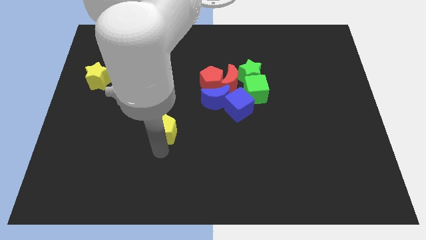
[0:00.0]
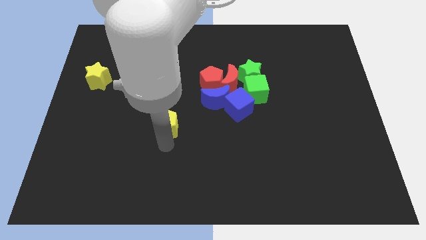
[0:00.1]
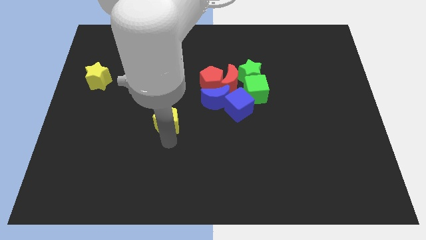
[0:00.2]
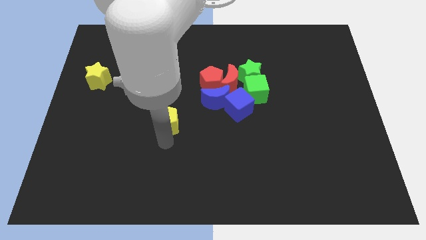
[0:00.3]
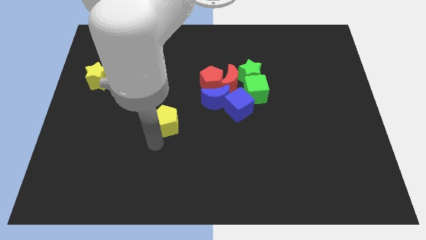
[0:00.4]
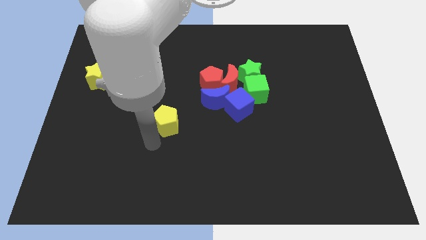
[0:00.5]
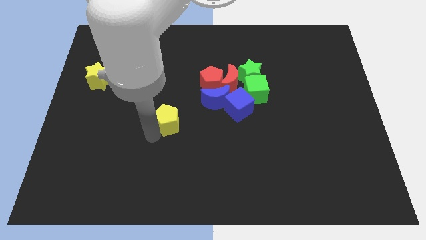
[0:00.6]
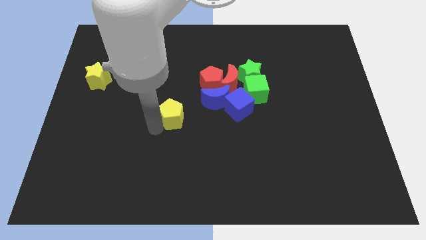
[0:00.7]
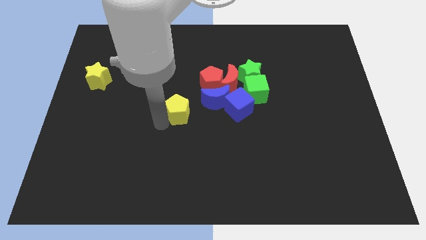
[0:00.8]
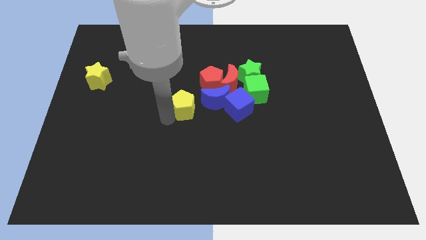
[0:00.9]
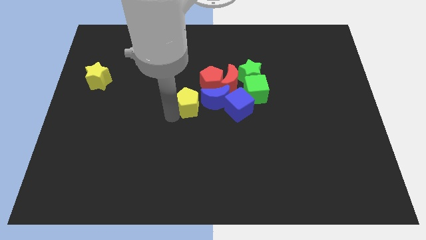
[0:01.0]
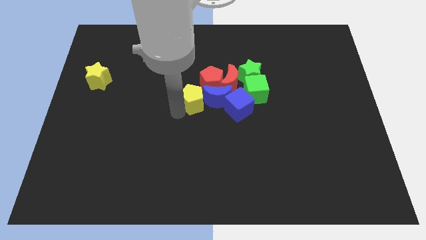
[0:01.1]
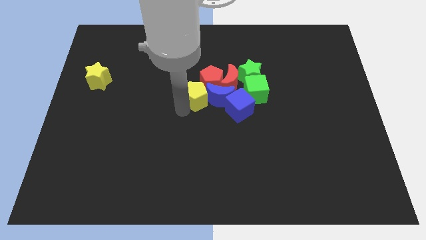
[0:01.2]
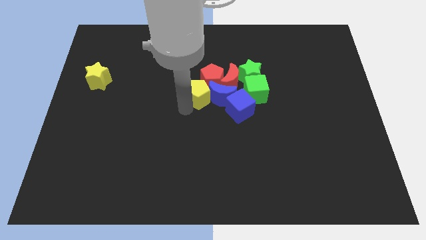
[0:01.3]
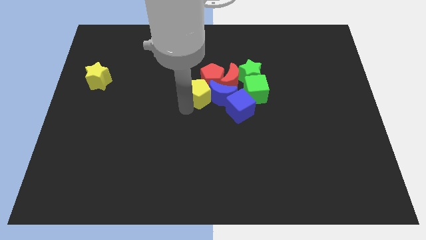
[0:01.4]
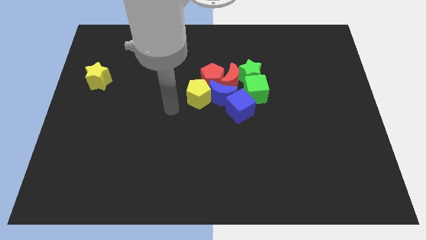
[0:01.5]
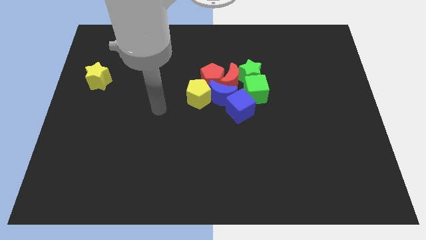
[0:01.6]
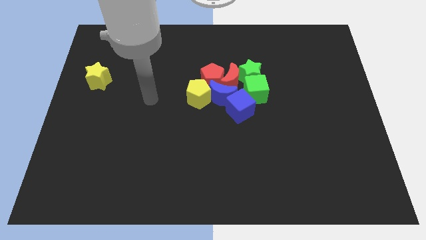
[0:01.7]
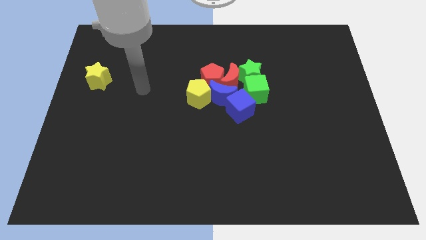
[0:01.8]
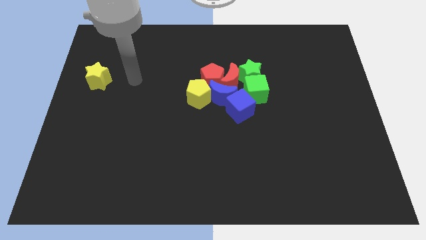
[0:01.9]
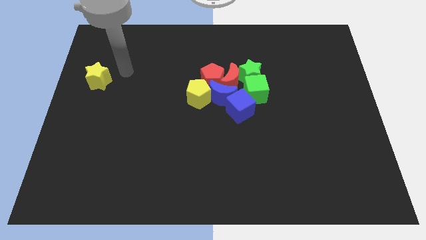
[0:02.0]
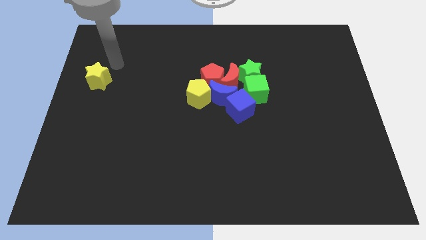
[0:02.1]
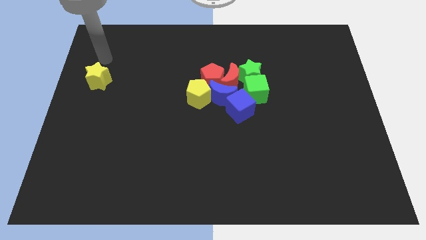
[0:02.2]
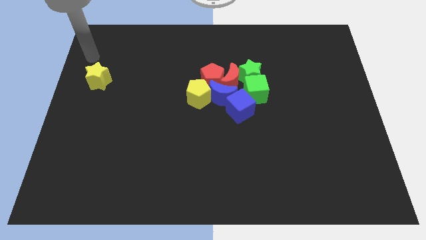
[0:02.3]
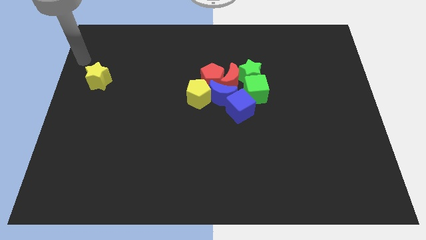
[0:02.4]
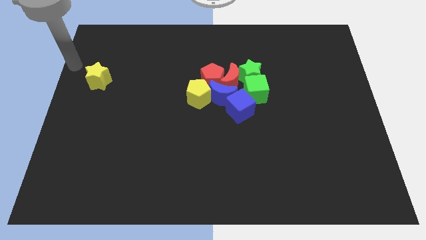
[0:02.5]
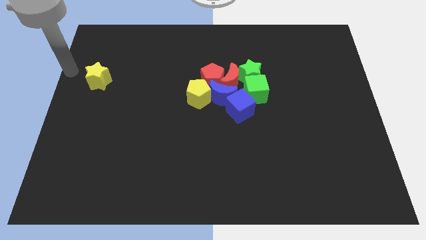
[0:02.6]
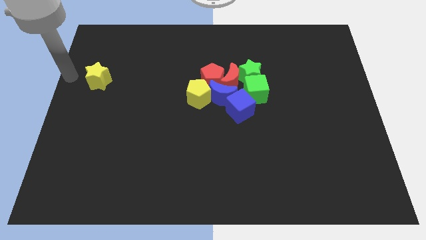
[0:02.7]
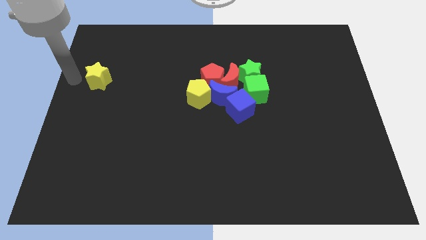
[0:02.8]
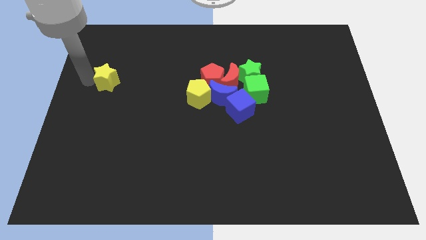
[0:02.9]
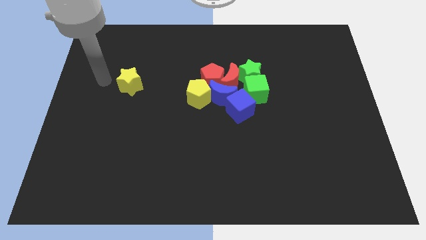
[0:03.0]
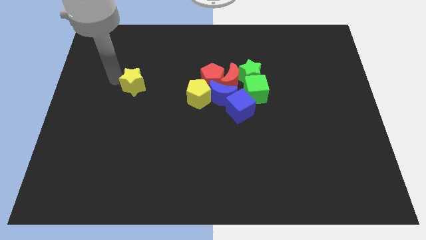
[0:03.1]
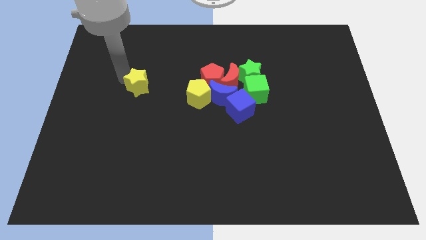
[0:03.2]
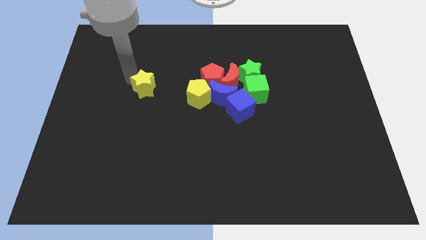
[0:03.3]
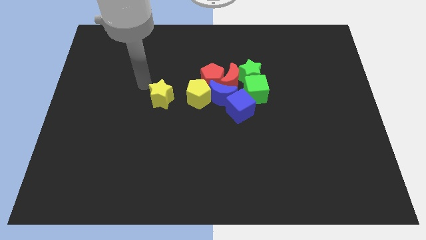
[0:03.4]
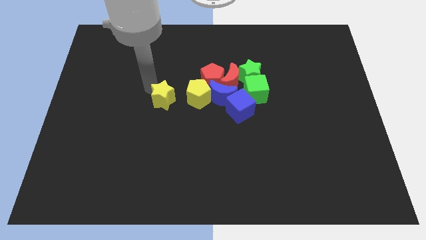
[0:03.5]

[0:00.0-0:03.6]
put yellow pentagon parallel to yellow star

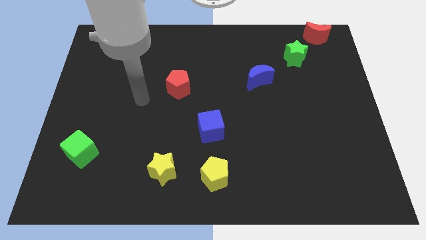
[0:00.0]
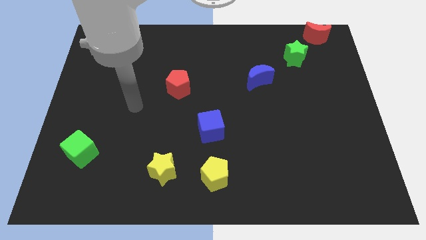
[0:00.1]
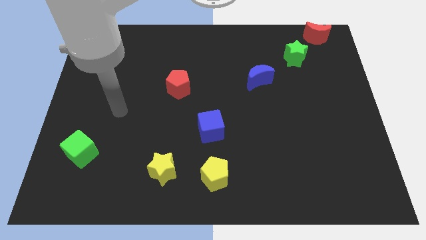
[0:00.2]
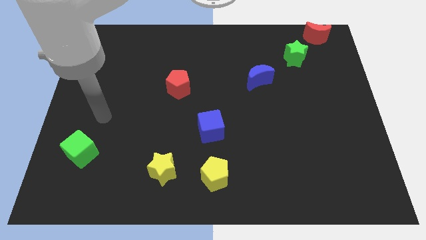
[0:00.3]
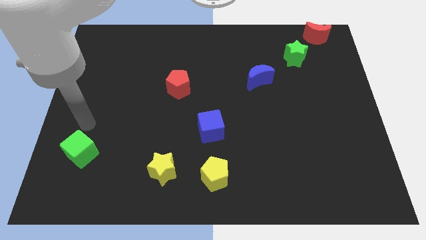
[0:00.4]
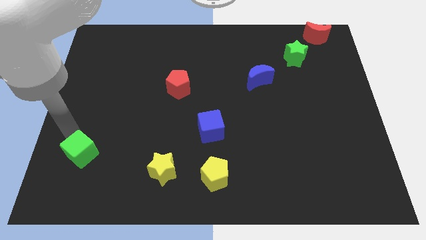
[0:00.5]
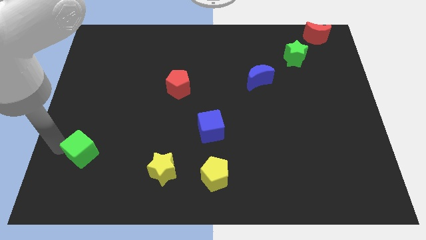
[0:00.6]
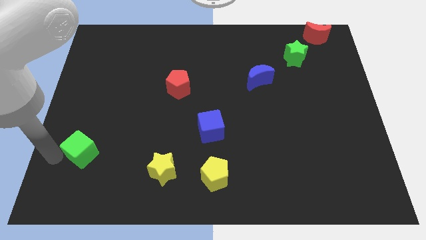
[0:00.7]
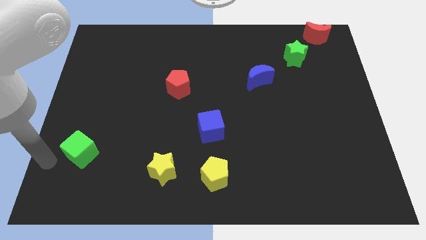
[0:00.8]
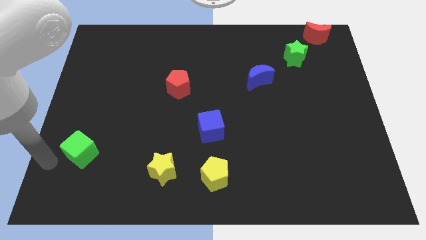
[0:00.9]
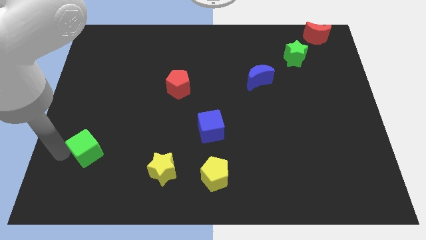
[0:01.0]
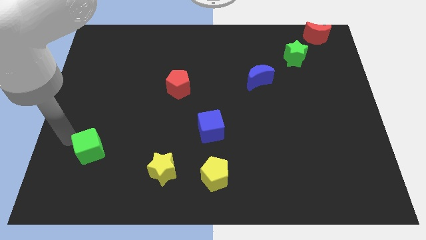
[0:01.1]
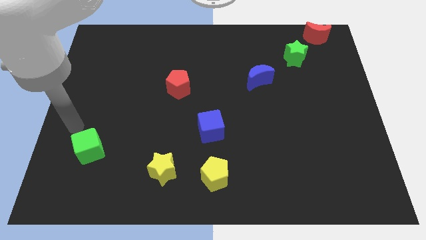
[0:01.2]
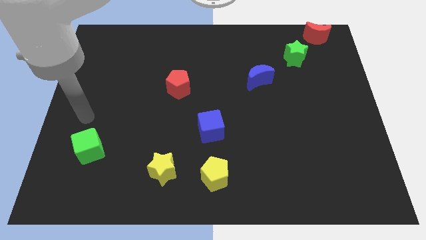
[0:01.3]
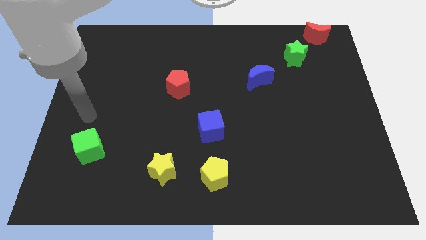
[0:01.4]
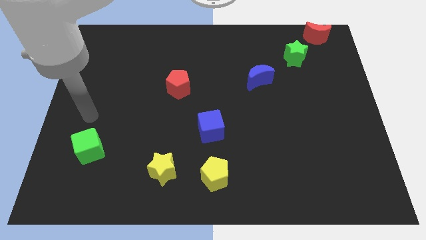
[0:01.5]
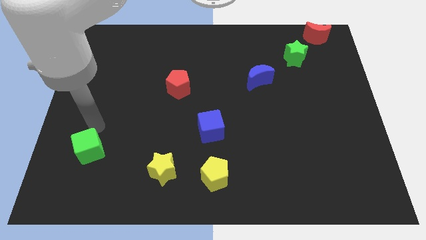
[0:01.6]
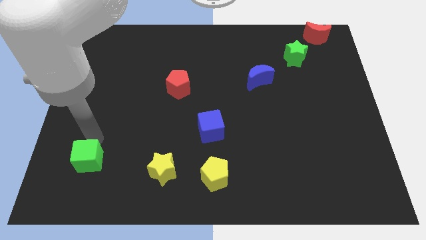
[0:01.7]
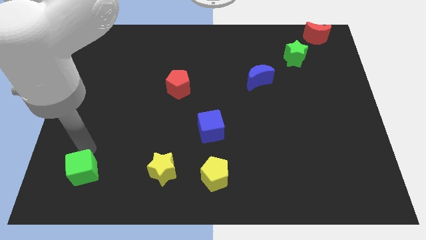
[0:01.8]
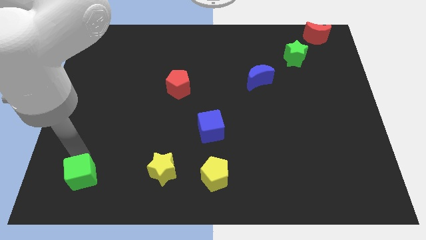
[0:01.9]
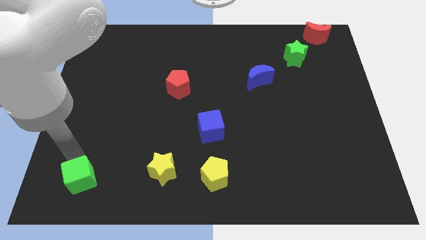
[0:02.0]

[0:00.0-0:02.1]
place green cube to left of yellow star

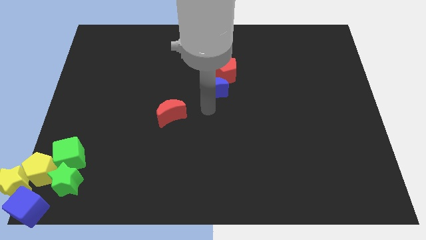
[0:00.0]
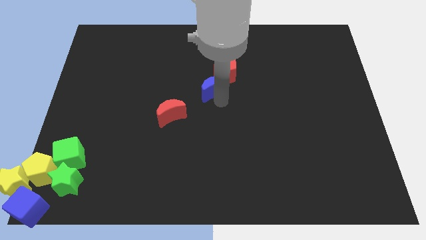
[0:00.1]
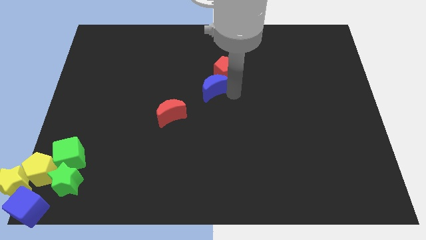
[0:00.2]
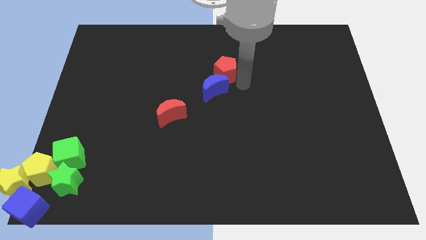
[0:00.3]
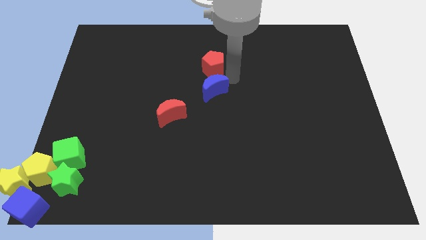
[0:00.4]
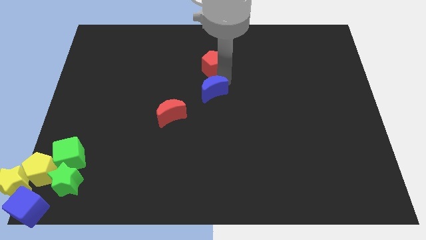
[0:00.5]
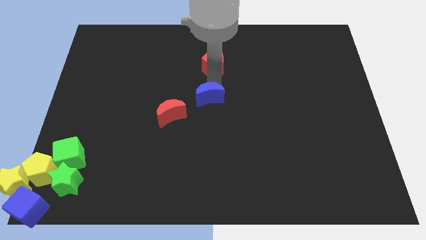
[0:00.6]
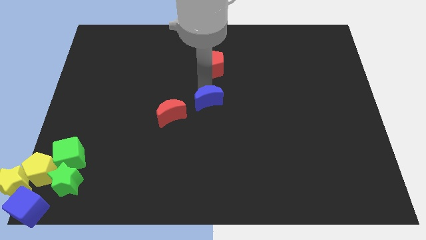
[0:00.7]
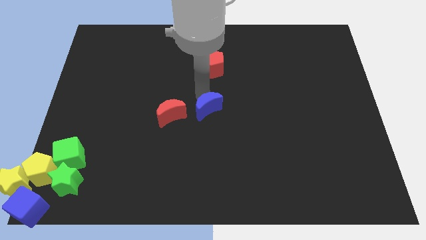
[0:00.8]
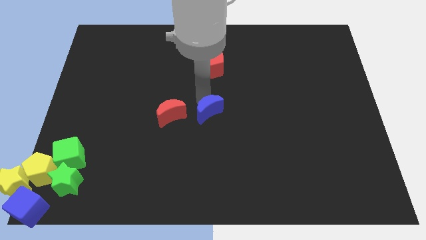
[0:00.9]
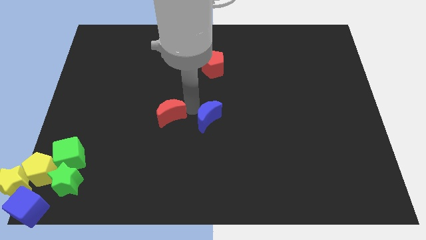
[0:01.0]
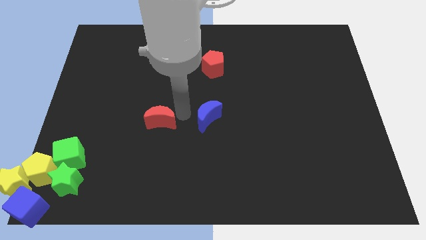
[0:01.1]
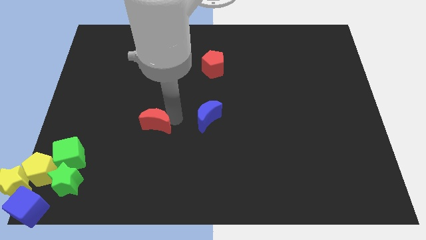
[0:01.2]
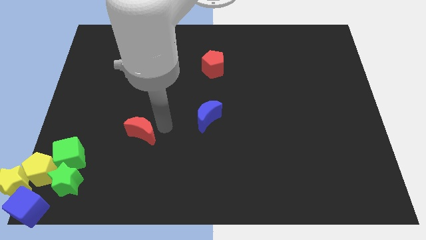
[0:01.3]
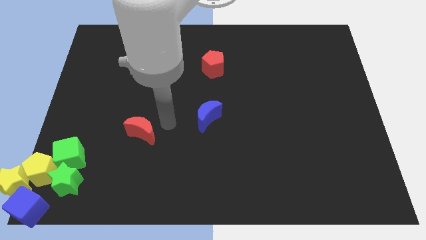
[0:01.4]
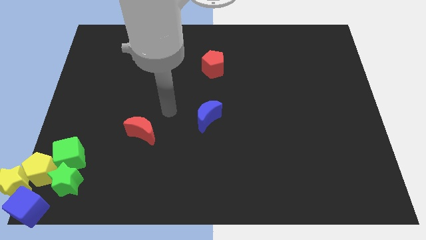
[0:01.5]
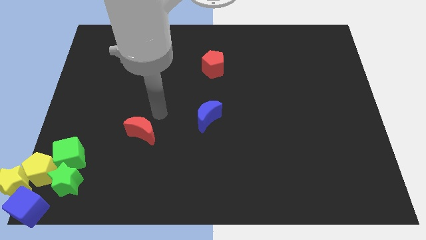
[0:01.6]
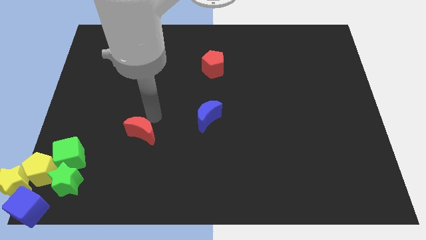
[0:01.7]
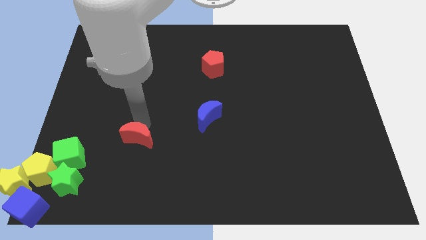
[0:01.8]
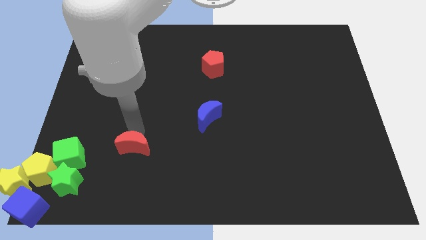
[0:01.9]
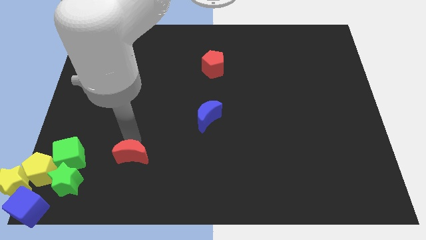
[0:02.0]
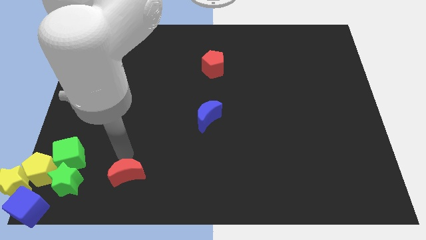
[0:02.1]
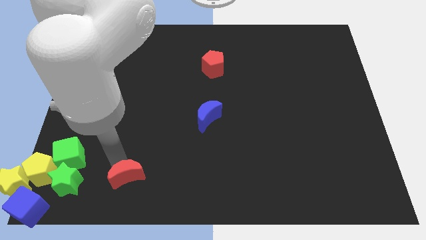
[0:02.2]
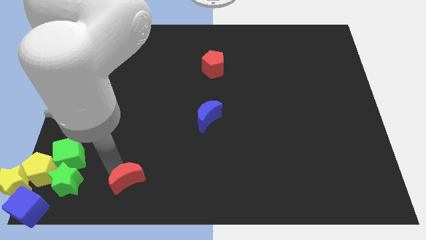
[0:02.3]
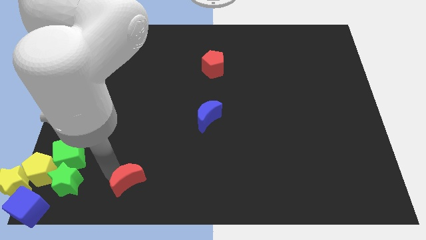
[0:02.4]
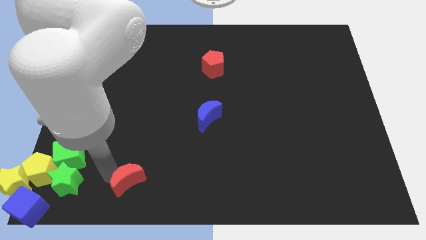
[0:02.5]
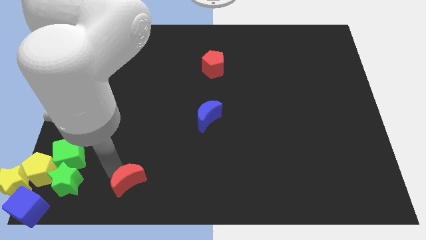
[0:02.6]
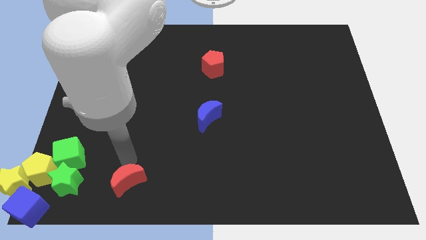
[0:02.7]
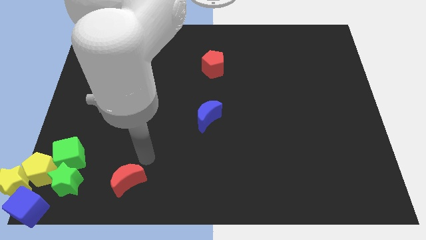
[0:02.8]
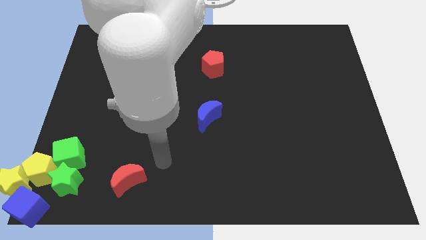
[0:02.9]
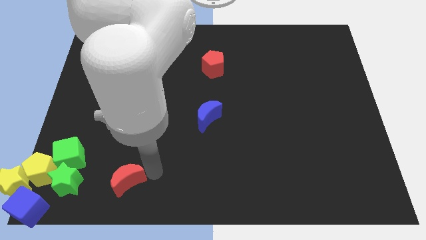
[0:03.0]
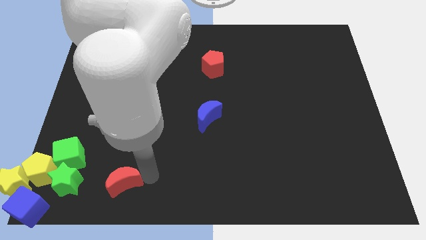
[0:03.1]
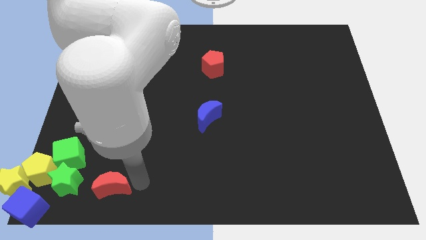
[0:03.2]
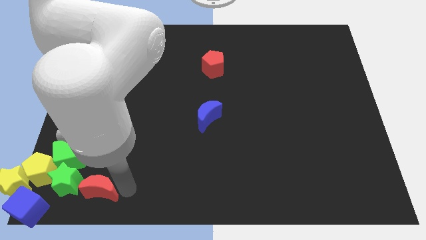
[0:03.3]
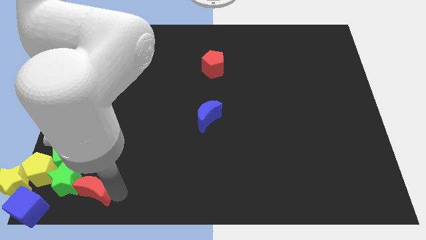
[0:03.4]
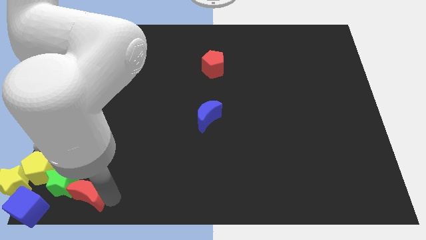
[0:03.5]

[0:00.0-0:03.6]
drag the red moon into the right side of the green star
